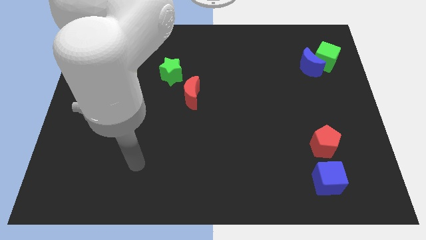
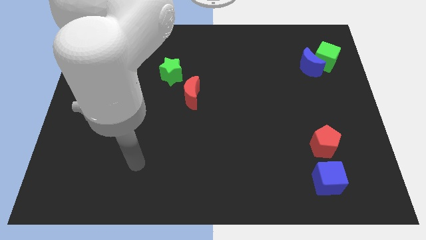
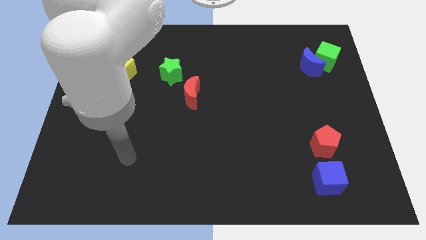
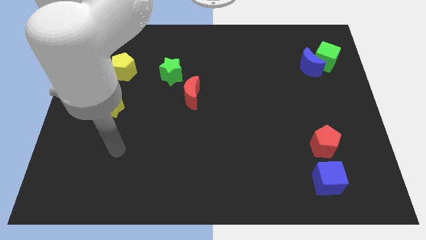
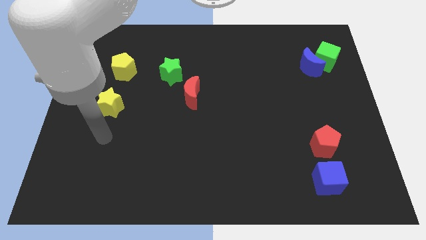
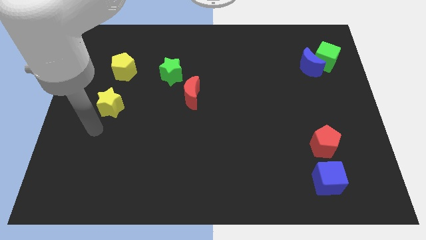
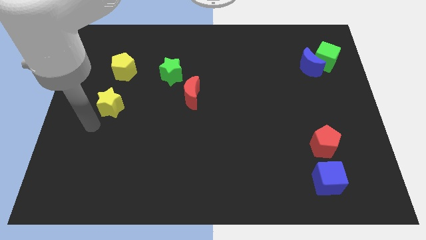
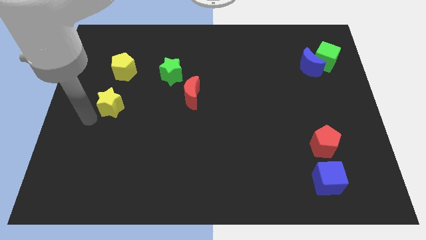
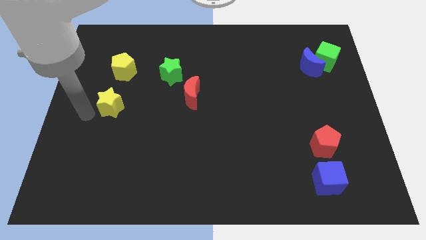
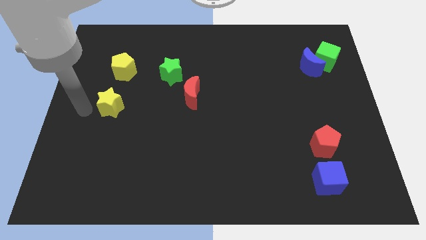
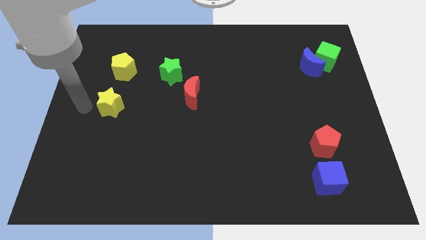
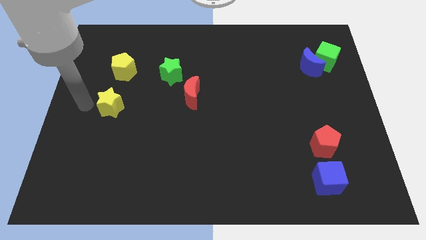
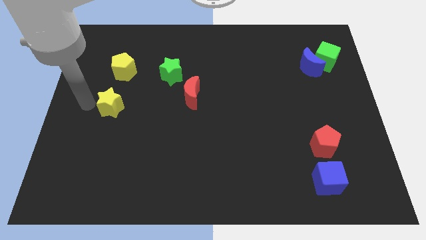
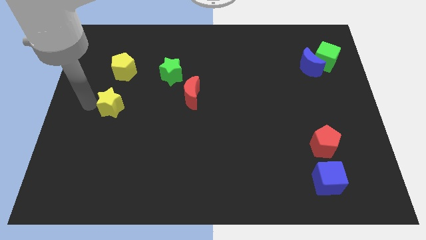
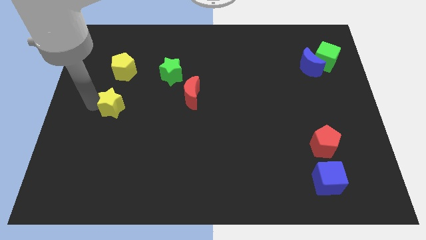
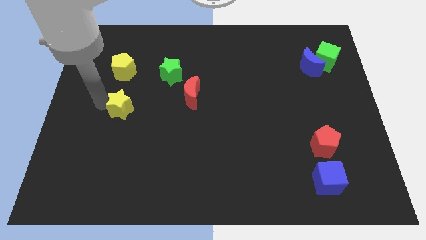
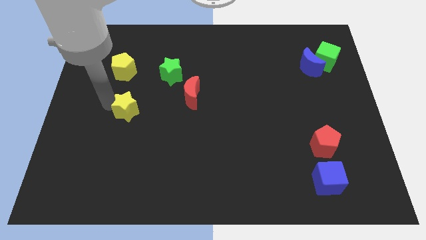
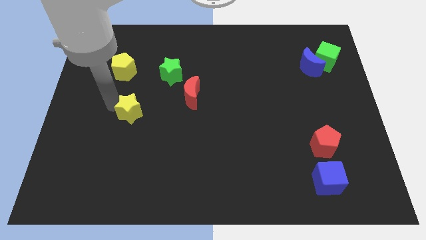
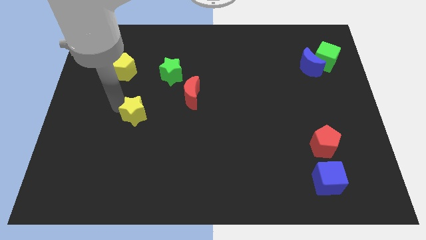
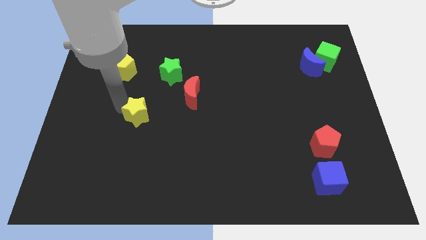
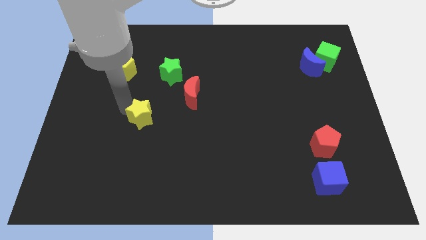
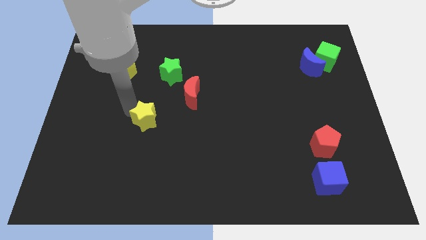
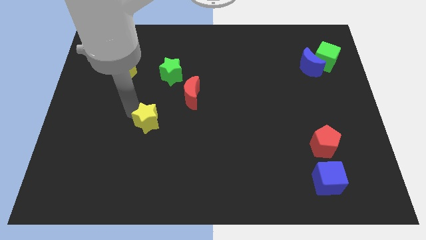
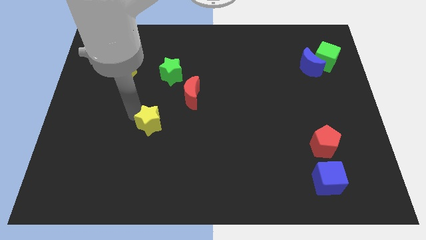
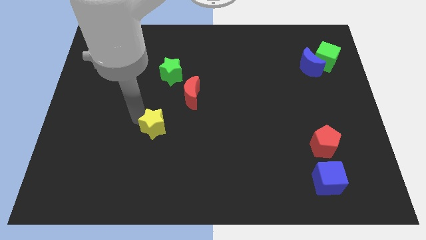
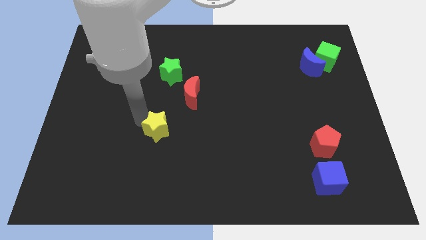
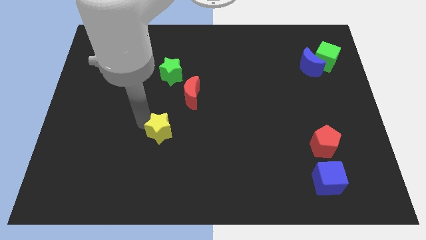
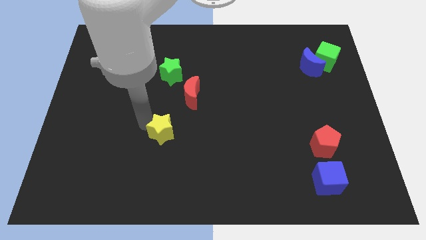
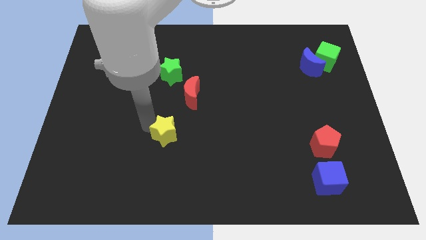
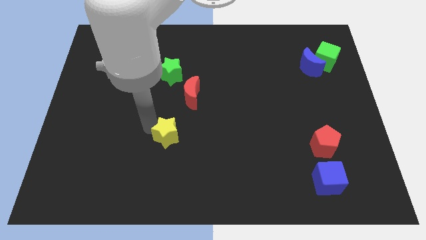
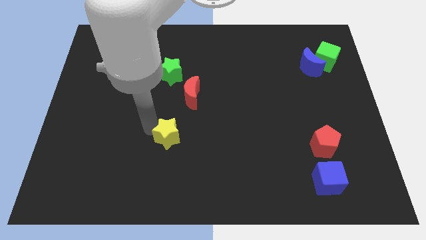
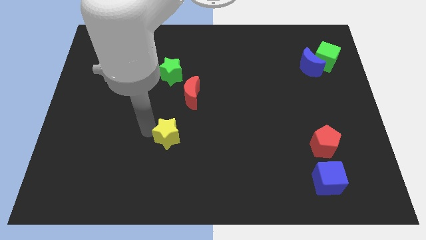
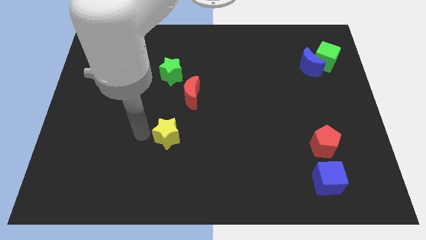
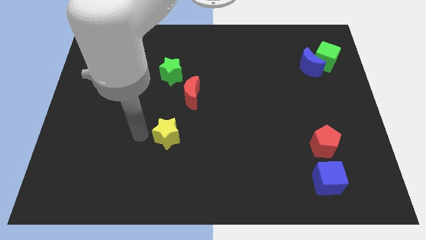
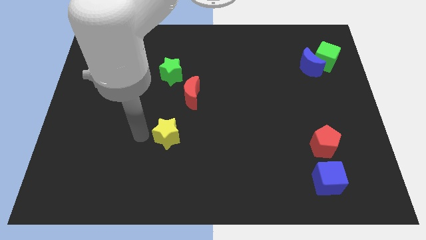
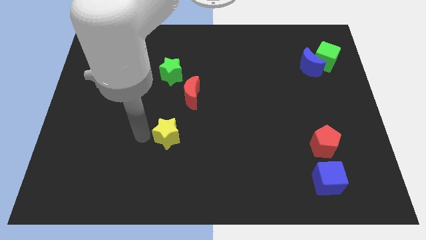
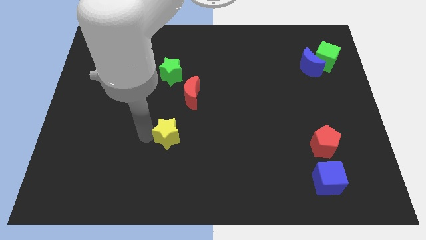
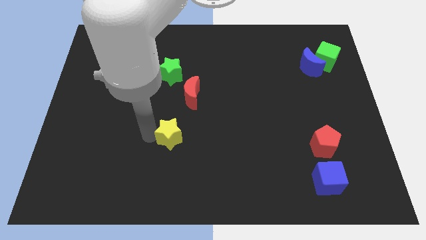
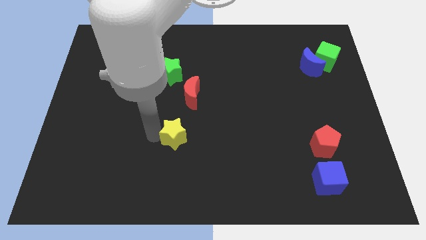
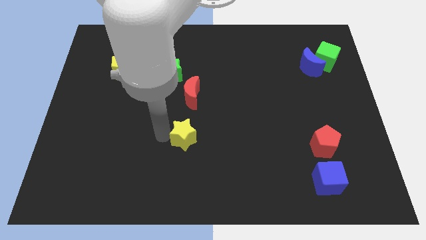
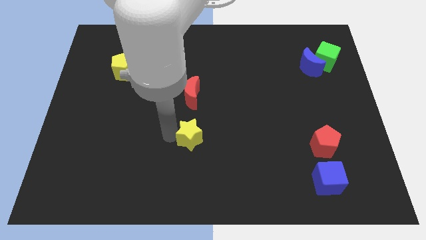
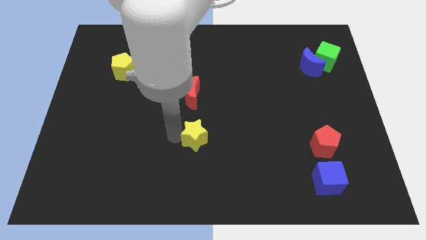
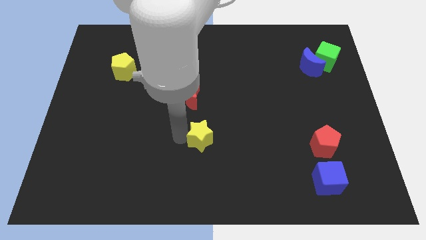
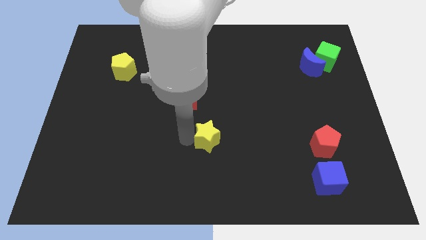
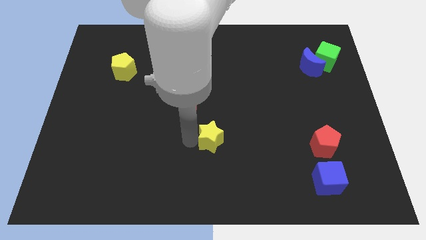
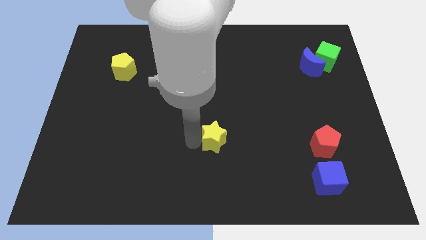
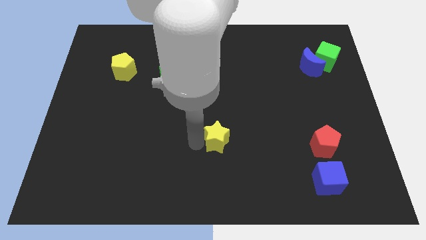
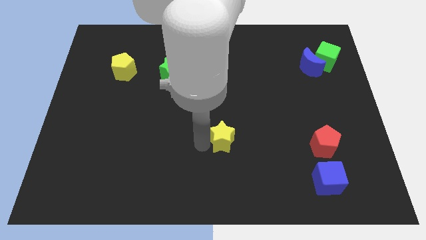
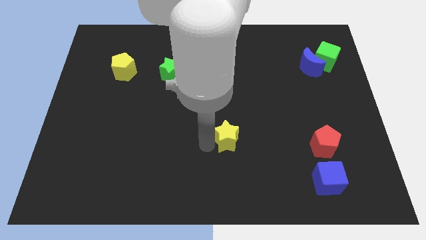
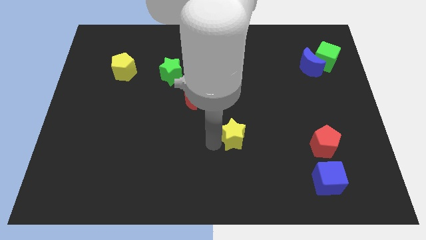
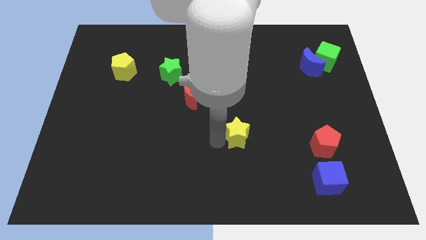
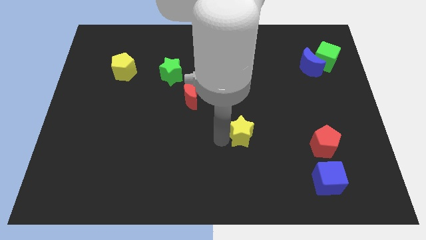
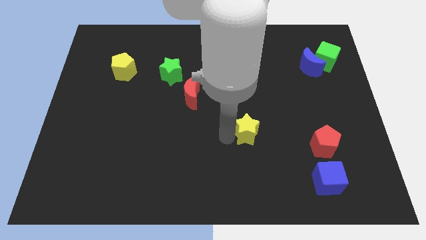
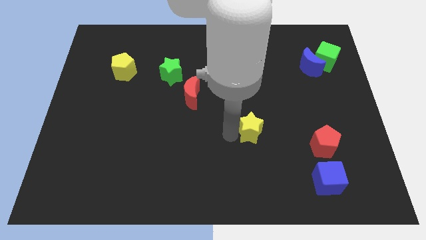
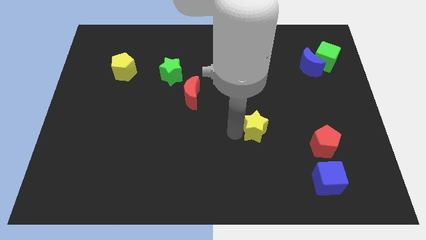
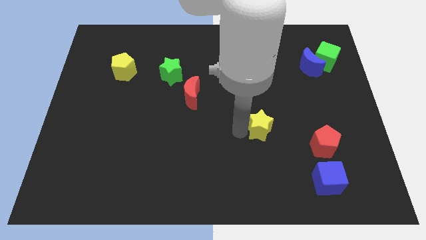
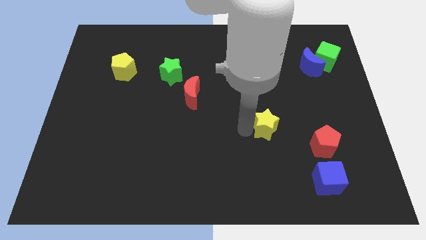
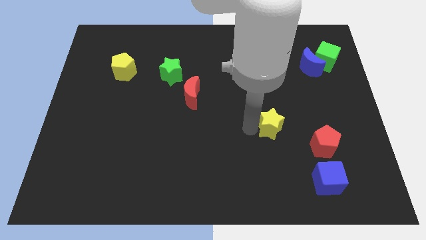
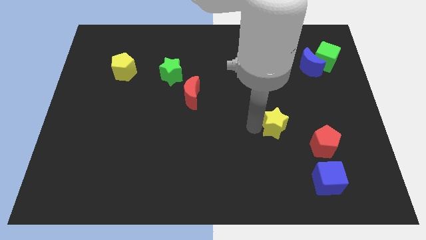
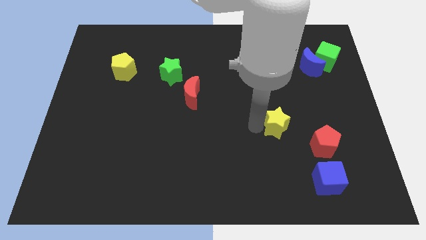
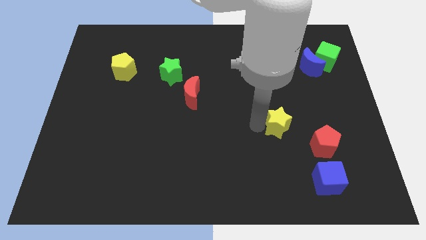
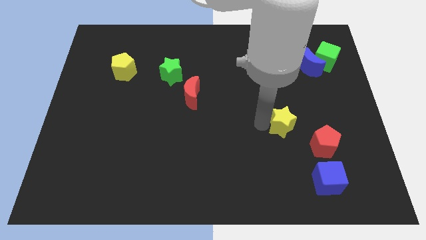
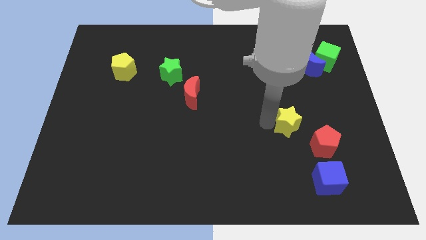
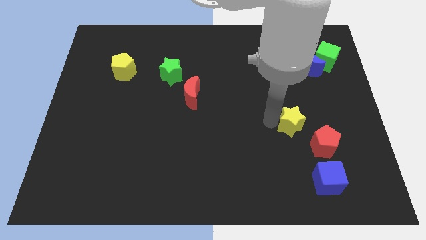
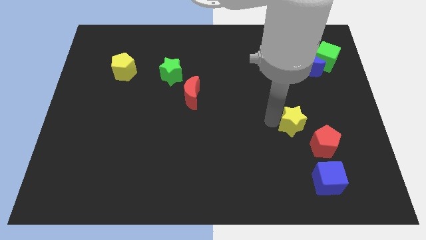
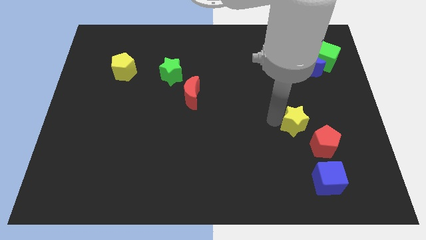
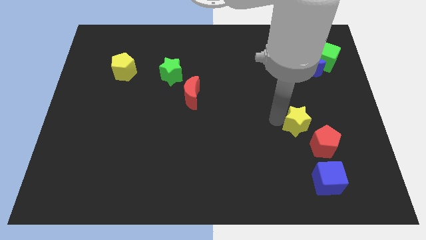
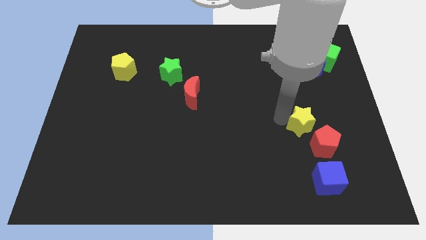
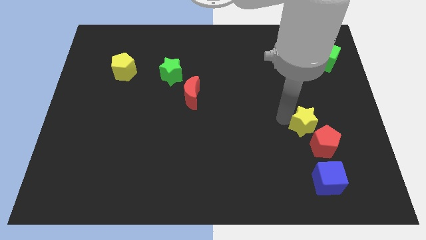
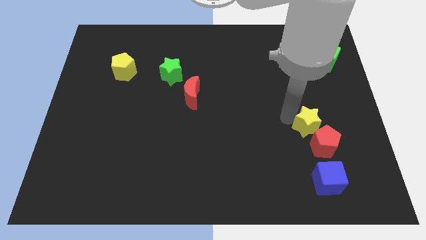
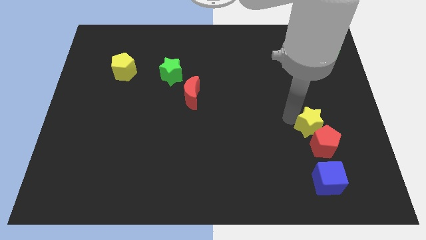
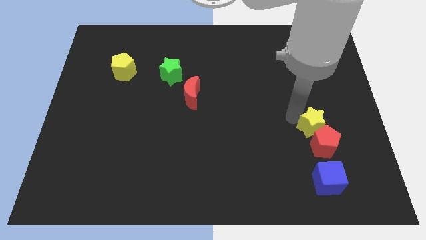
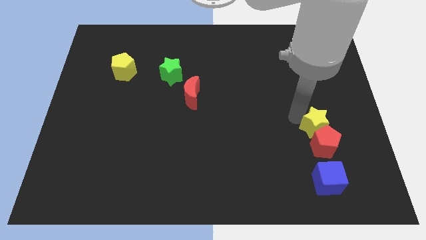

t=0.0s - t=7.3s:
slide the yellow star next to the red pentagon

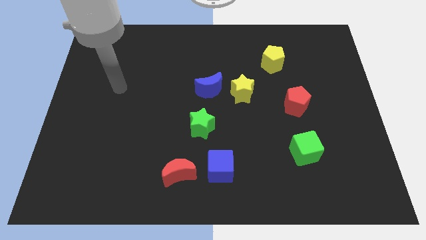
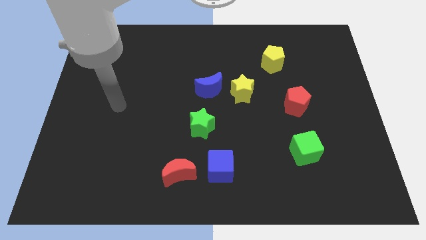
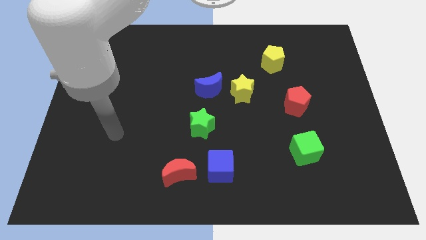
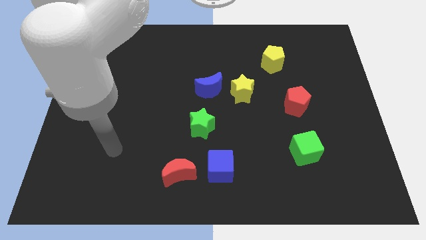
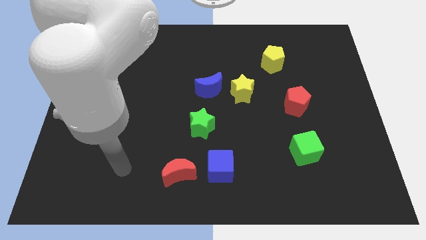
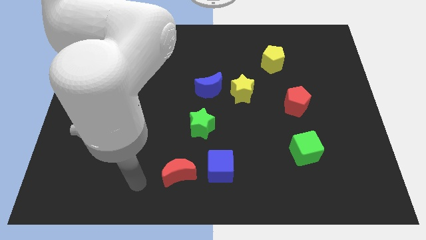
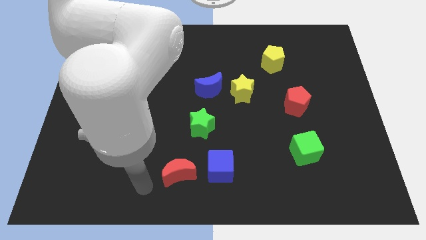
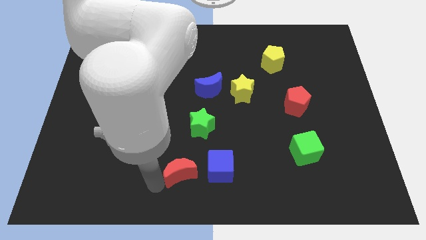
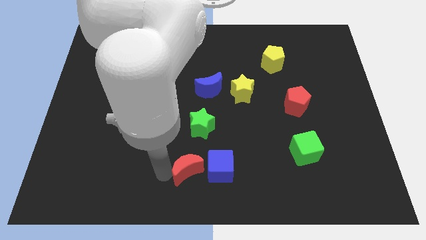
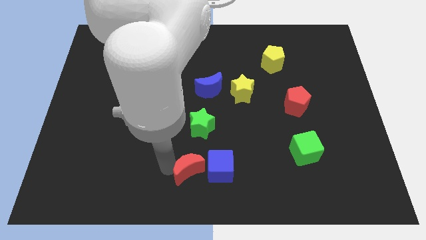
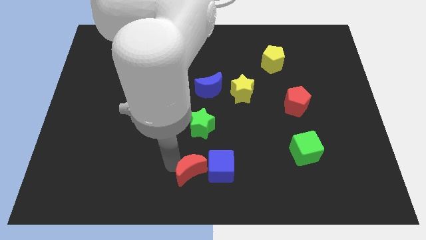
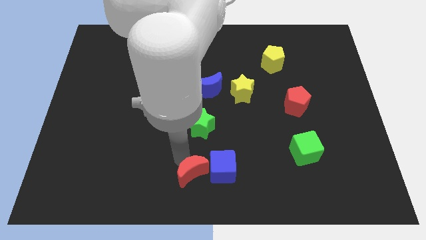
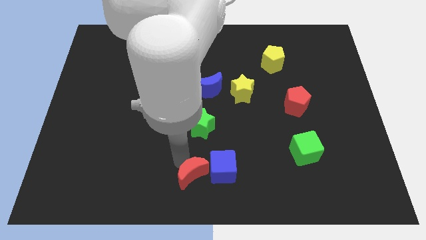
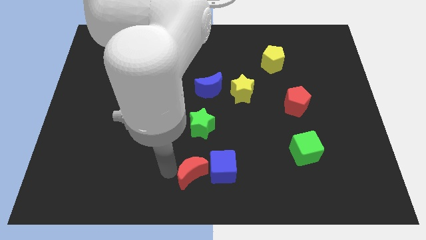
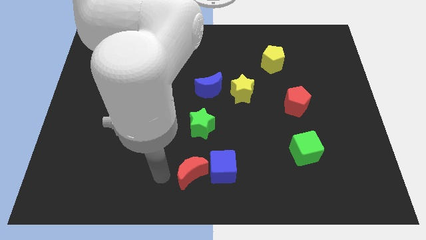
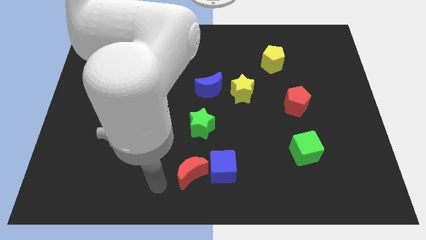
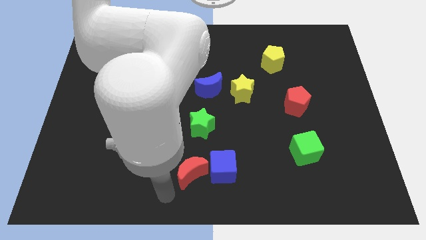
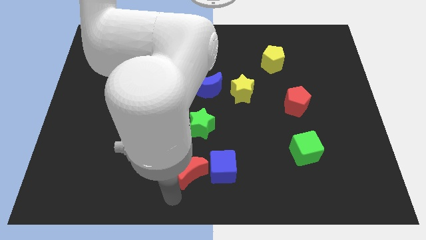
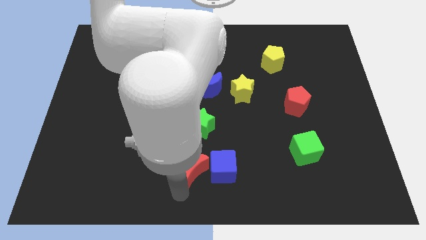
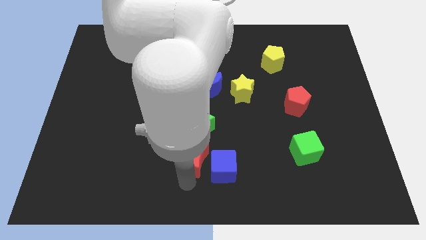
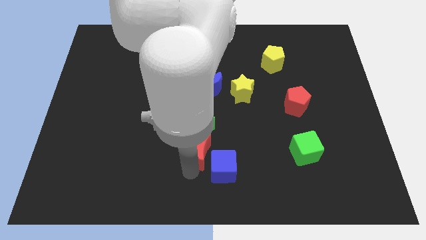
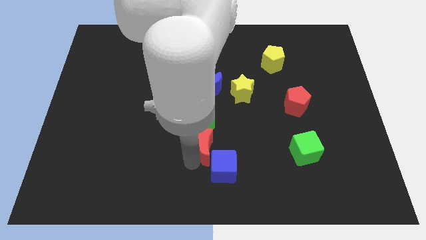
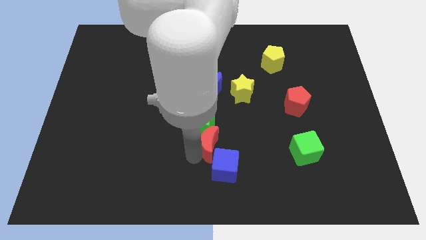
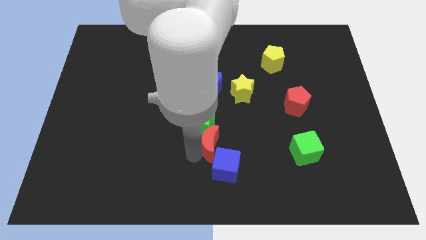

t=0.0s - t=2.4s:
slide the red moon to the green star
